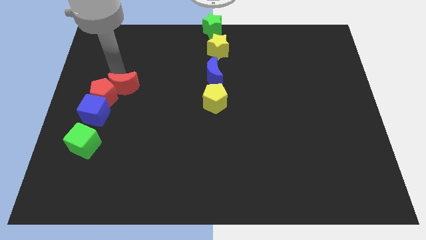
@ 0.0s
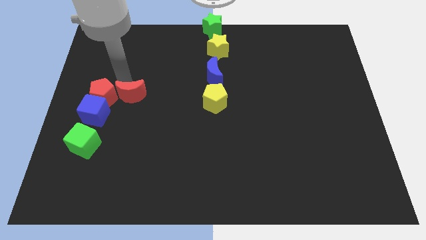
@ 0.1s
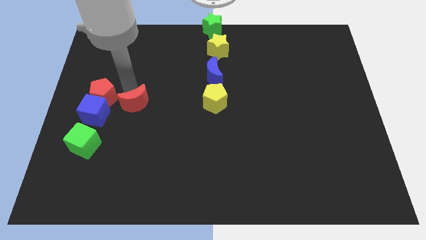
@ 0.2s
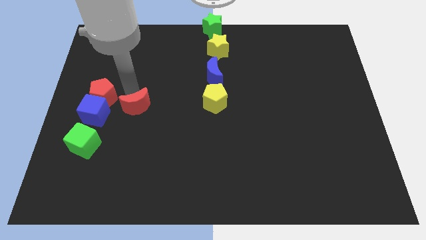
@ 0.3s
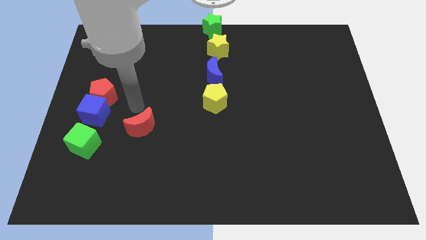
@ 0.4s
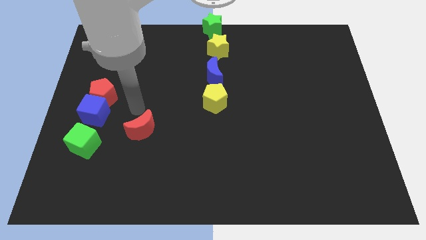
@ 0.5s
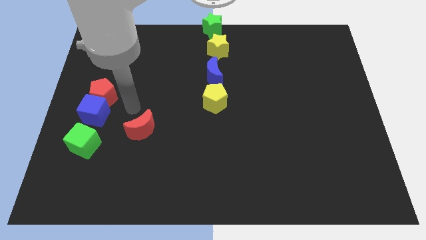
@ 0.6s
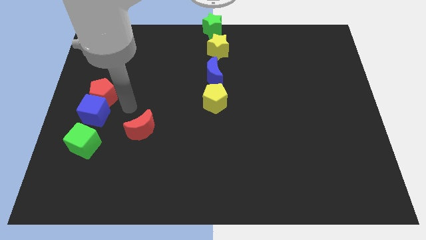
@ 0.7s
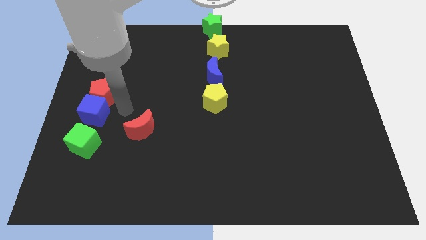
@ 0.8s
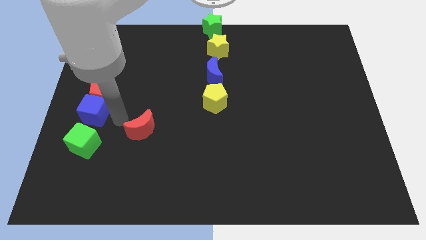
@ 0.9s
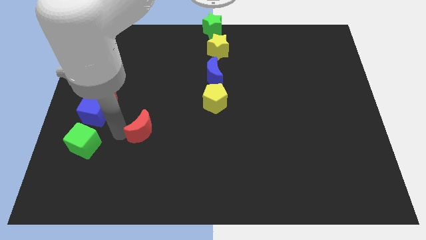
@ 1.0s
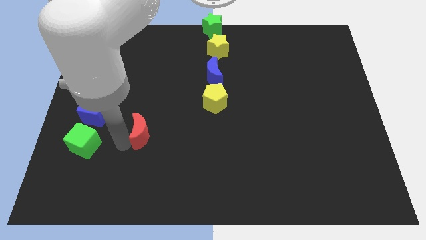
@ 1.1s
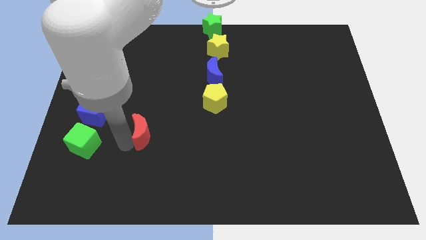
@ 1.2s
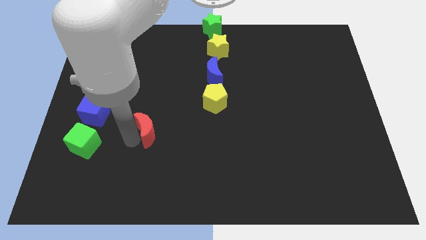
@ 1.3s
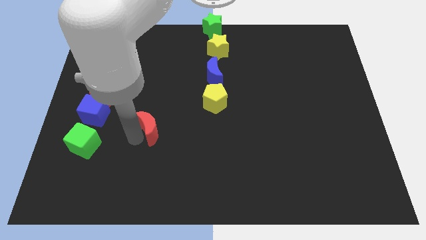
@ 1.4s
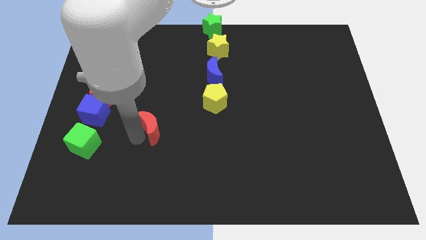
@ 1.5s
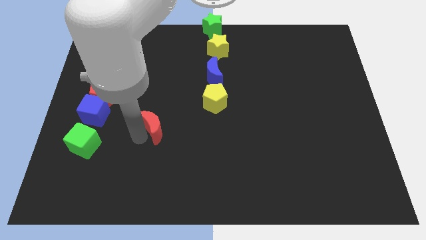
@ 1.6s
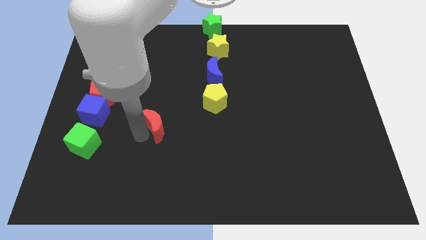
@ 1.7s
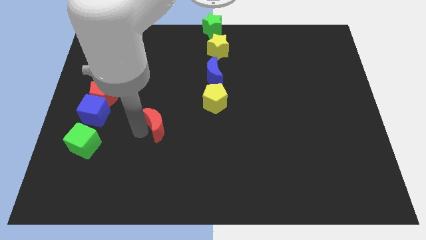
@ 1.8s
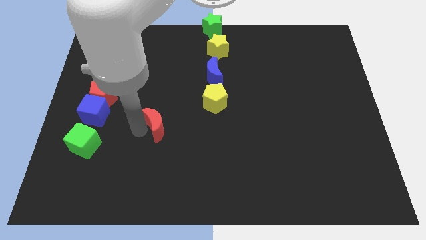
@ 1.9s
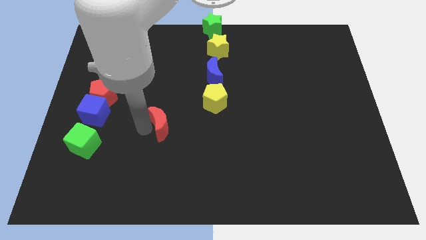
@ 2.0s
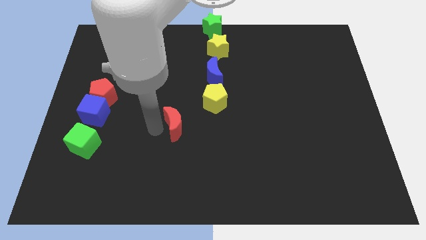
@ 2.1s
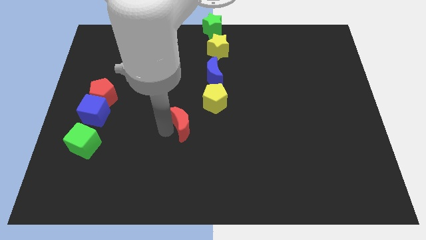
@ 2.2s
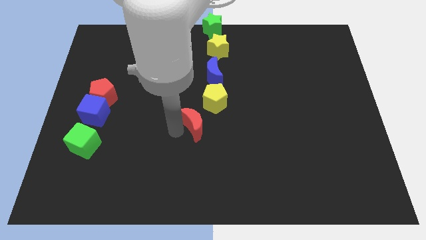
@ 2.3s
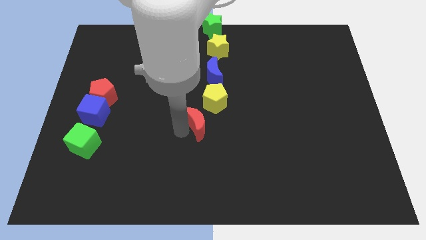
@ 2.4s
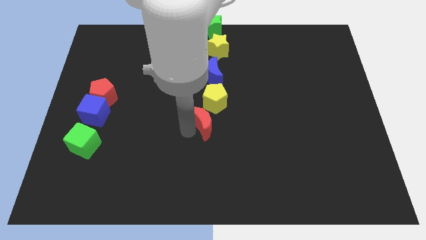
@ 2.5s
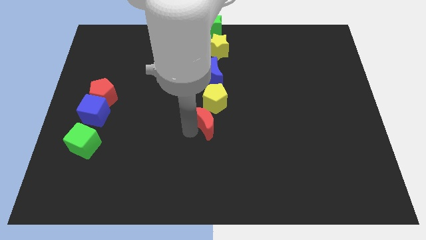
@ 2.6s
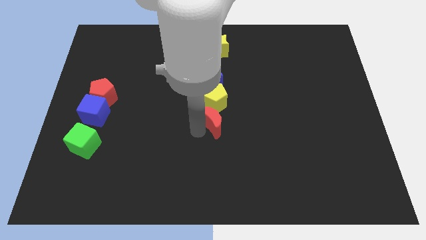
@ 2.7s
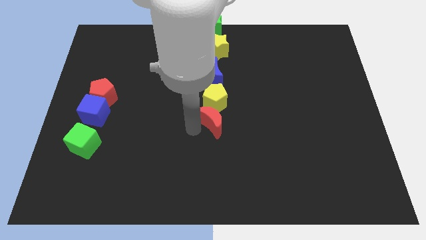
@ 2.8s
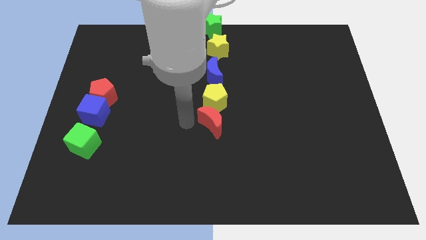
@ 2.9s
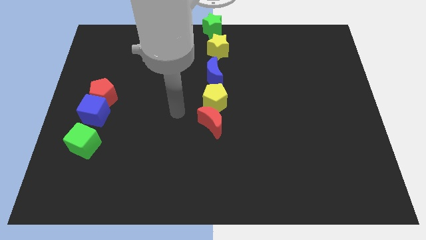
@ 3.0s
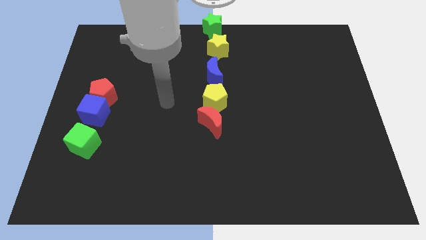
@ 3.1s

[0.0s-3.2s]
put the red moon at the bottom of yellow pentagon

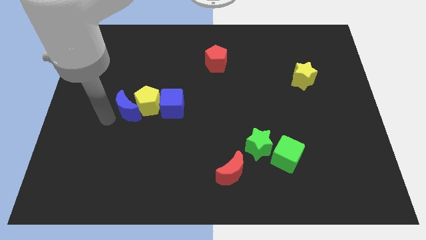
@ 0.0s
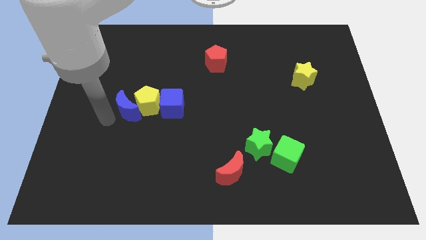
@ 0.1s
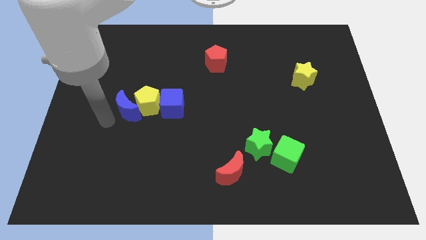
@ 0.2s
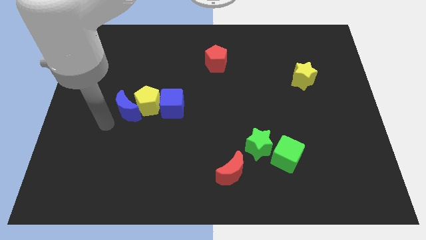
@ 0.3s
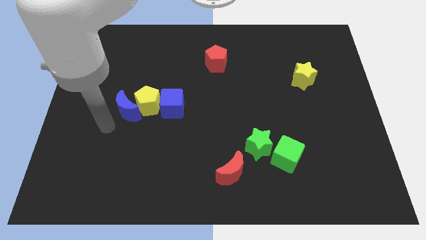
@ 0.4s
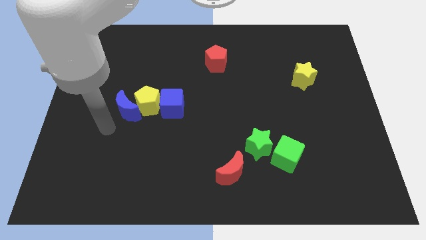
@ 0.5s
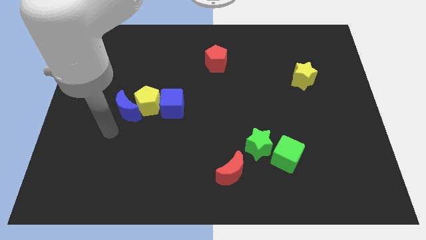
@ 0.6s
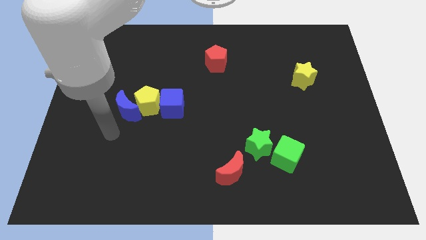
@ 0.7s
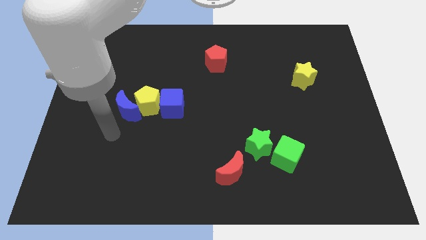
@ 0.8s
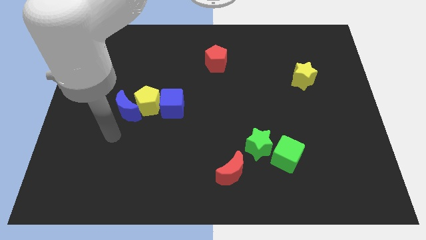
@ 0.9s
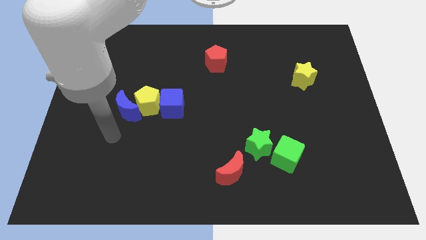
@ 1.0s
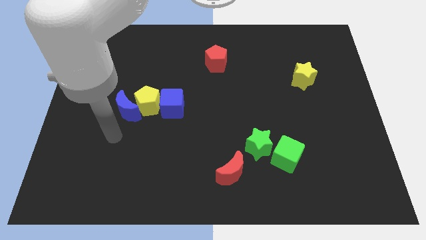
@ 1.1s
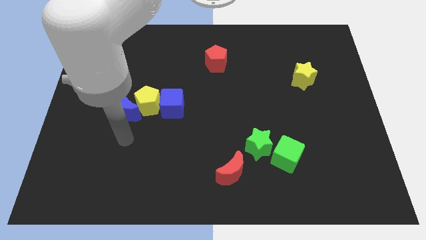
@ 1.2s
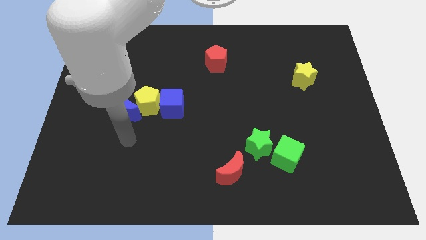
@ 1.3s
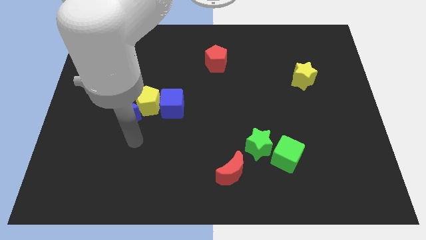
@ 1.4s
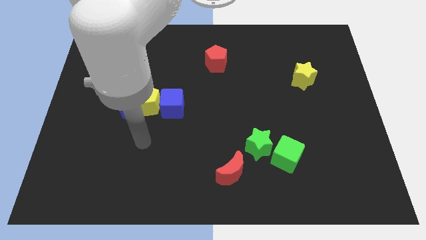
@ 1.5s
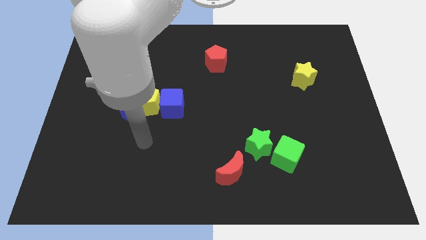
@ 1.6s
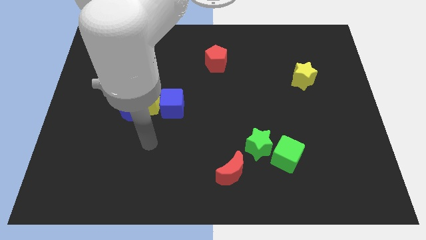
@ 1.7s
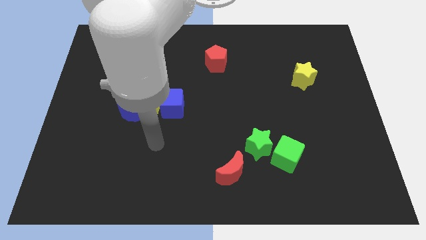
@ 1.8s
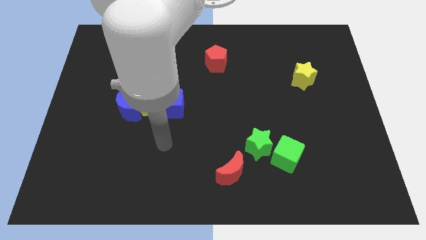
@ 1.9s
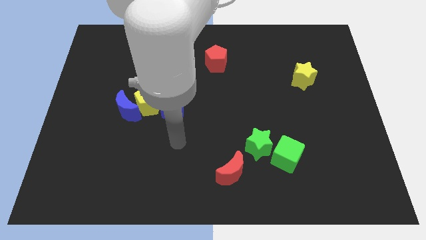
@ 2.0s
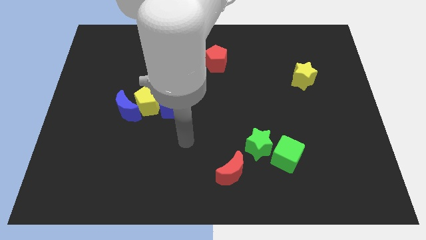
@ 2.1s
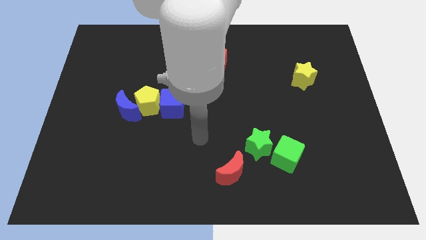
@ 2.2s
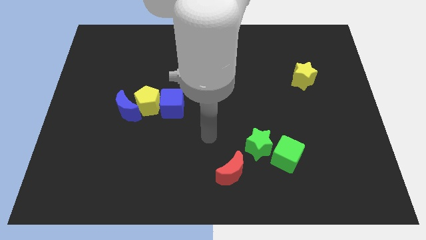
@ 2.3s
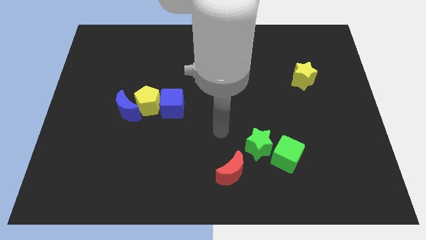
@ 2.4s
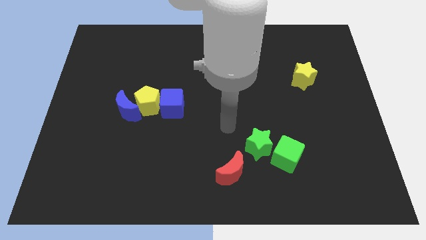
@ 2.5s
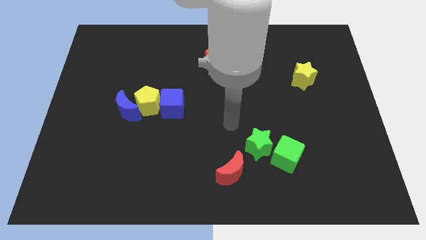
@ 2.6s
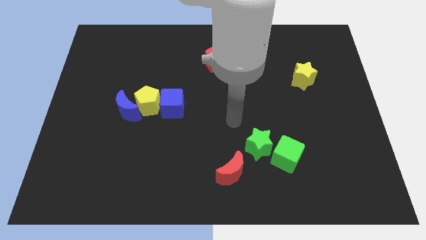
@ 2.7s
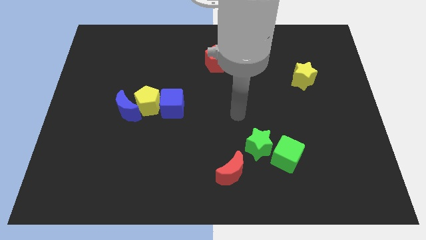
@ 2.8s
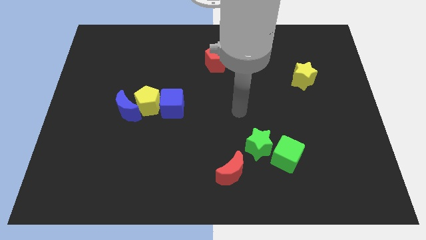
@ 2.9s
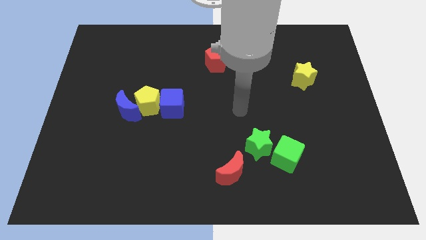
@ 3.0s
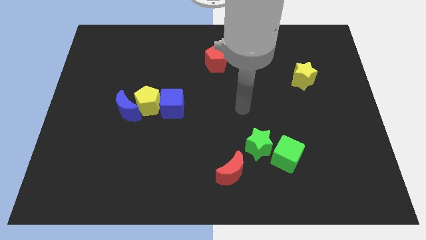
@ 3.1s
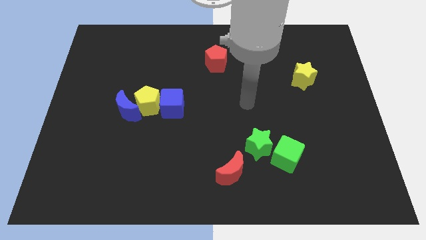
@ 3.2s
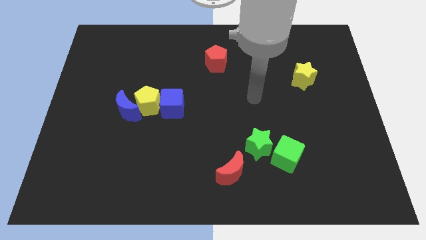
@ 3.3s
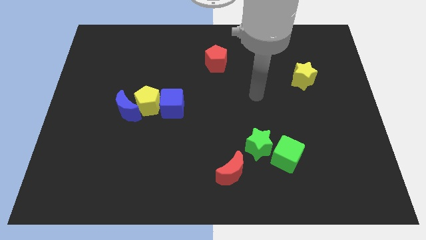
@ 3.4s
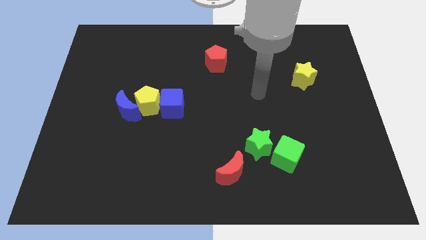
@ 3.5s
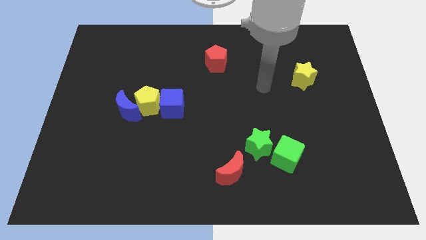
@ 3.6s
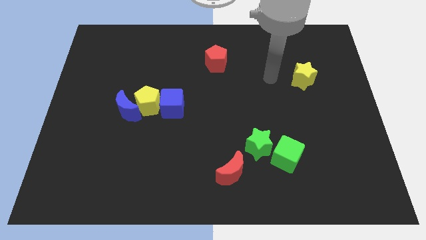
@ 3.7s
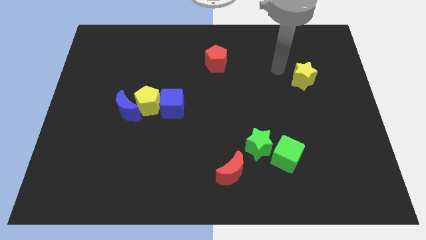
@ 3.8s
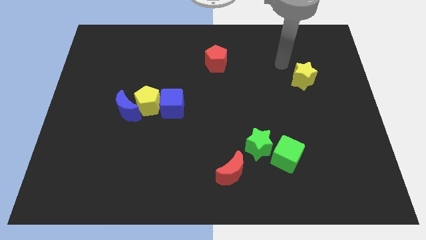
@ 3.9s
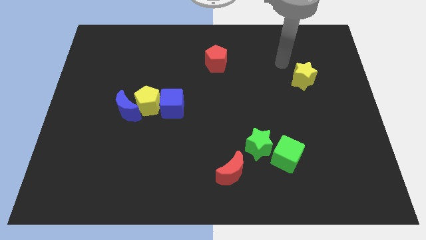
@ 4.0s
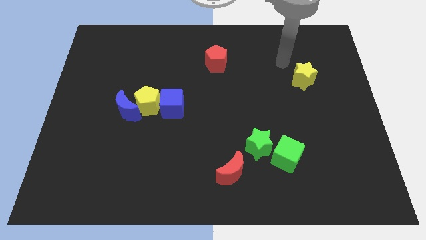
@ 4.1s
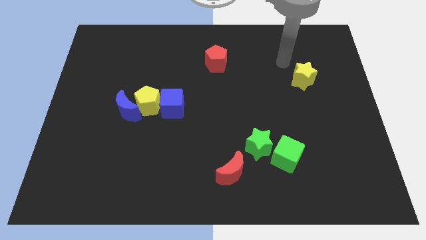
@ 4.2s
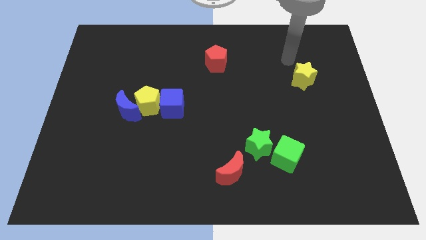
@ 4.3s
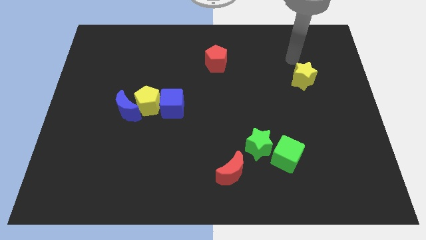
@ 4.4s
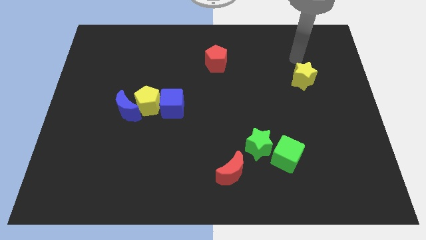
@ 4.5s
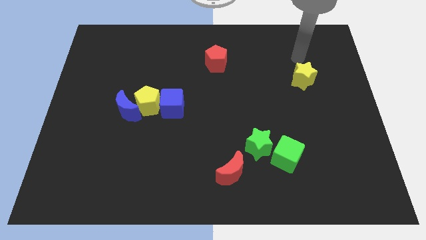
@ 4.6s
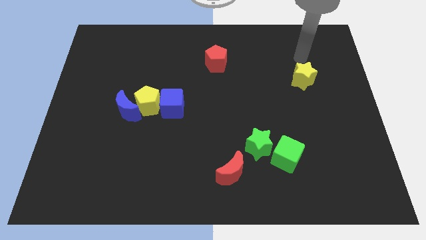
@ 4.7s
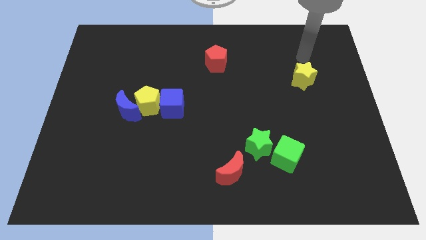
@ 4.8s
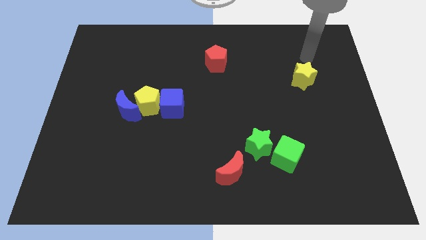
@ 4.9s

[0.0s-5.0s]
go to the top side of the yellow star

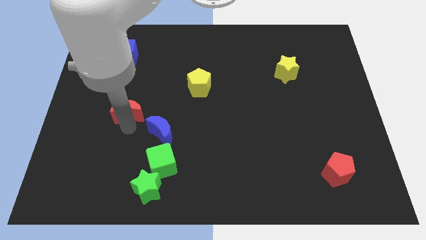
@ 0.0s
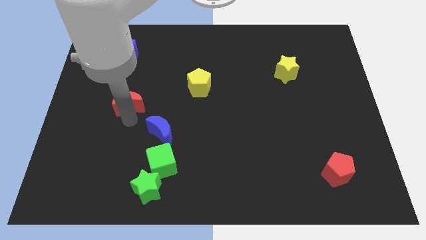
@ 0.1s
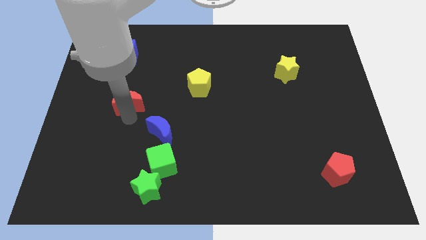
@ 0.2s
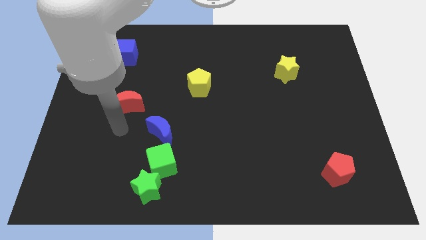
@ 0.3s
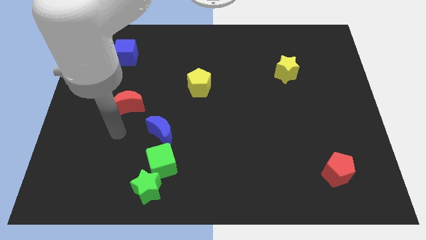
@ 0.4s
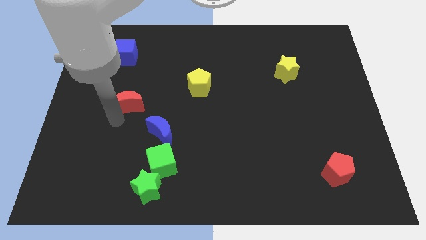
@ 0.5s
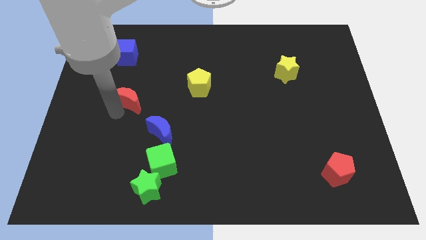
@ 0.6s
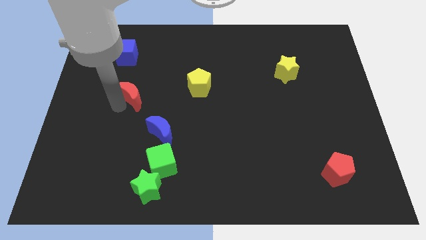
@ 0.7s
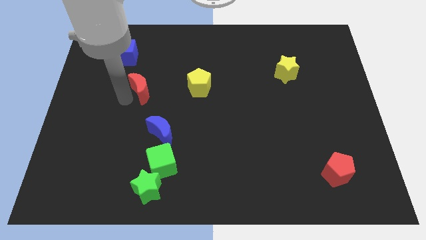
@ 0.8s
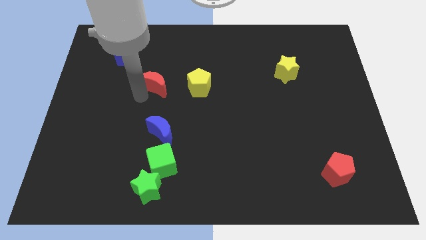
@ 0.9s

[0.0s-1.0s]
move the red crescent to the left of the yellow pentagon
